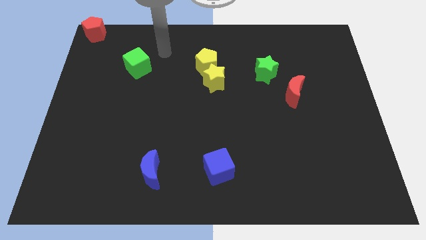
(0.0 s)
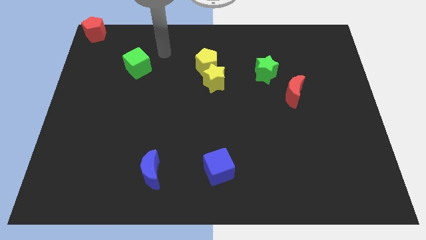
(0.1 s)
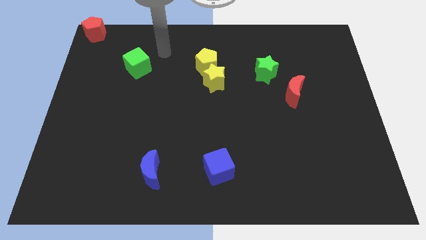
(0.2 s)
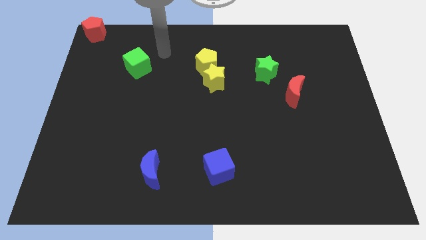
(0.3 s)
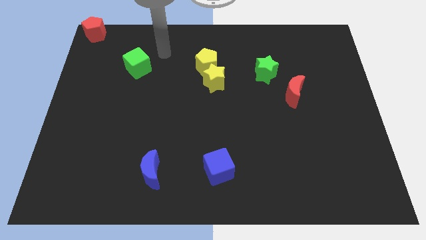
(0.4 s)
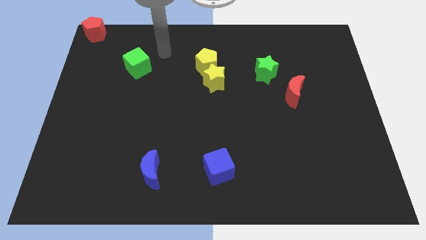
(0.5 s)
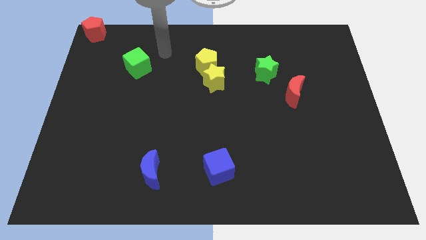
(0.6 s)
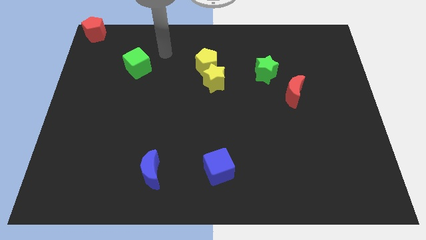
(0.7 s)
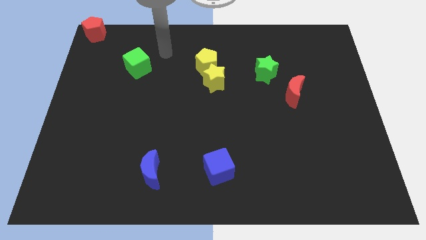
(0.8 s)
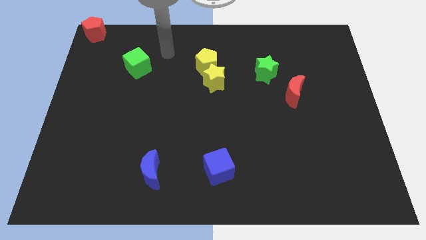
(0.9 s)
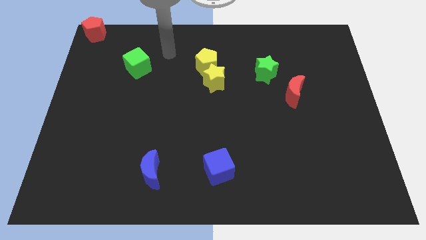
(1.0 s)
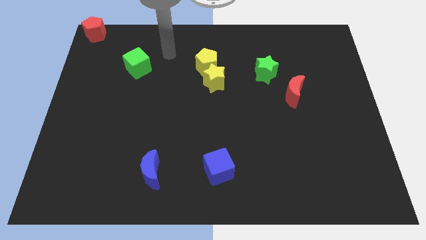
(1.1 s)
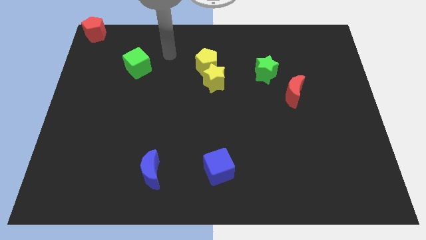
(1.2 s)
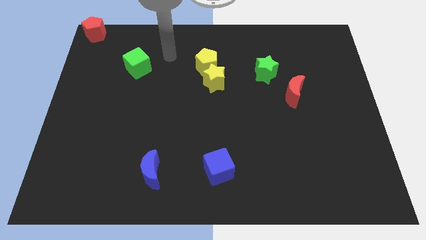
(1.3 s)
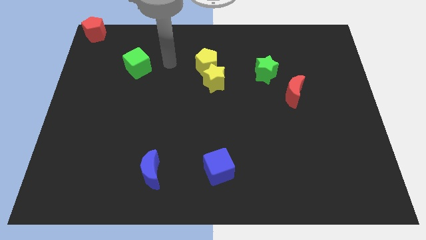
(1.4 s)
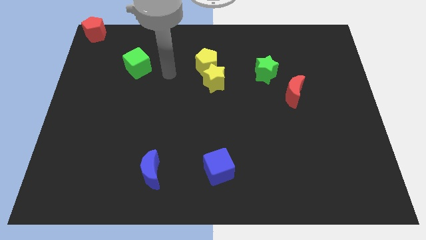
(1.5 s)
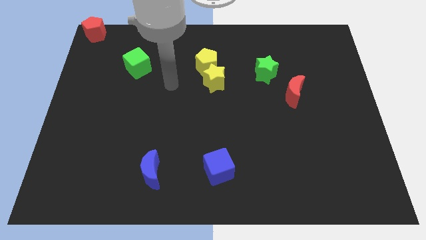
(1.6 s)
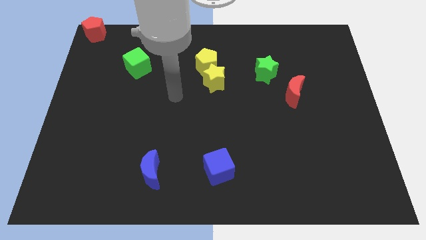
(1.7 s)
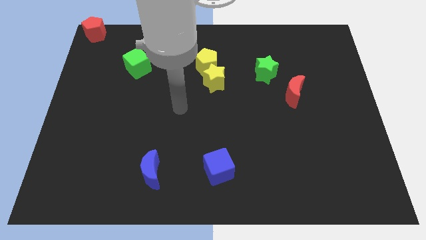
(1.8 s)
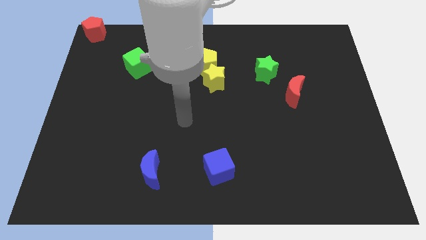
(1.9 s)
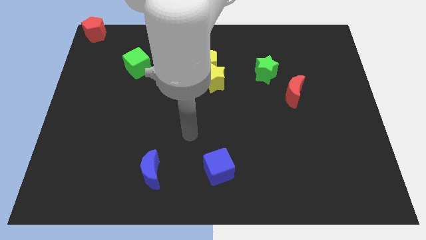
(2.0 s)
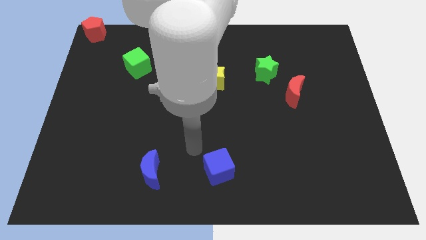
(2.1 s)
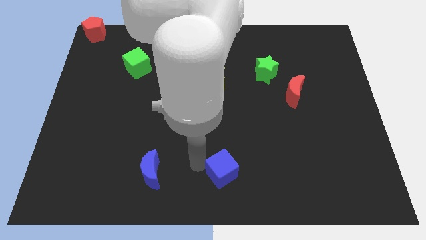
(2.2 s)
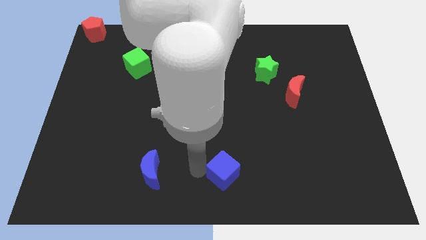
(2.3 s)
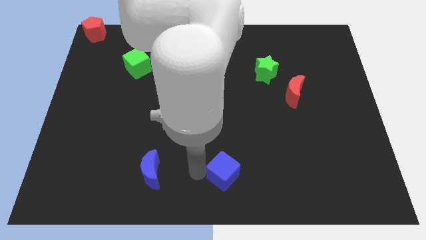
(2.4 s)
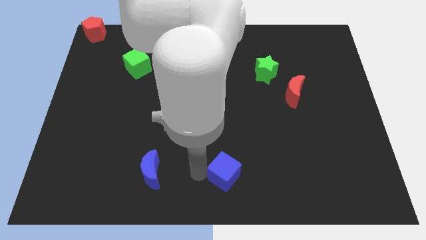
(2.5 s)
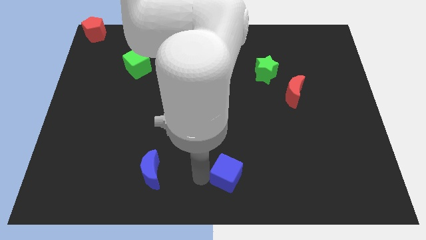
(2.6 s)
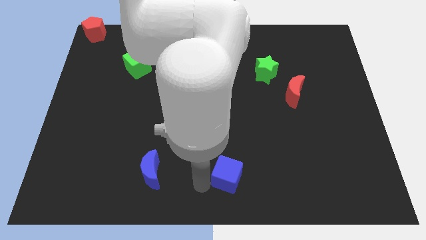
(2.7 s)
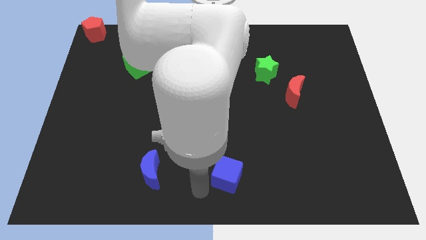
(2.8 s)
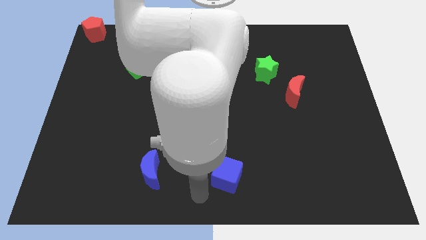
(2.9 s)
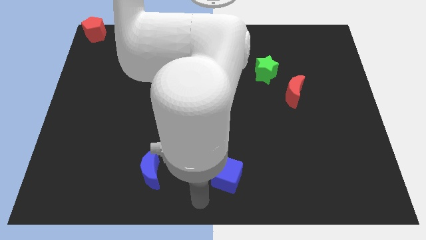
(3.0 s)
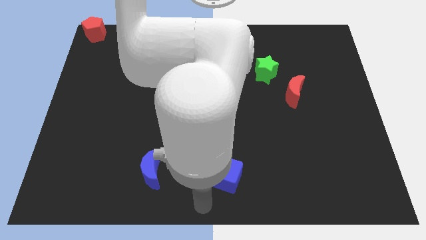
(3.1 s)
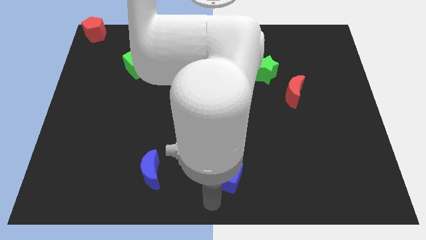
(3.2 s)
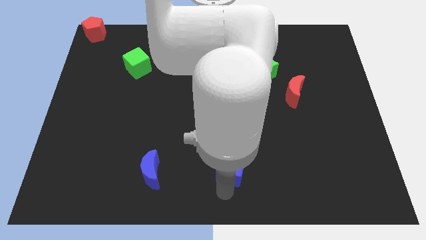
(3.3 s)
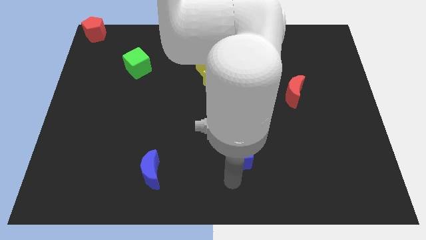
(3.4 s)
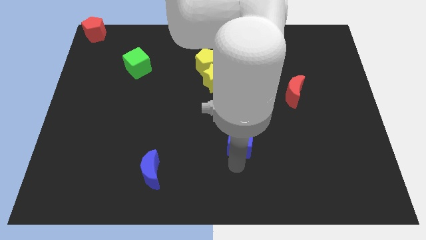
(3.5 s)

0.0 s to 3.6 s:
move the blue cube slightly to the center of the board

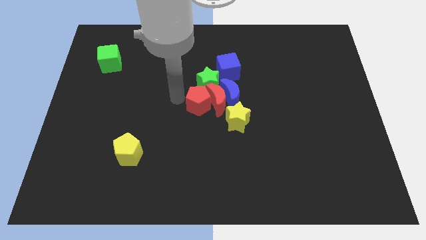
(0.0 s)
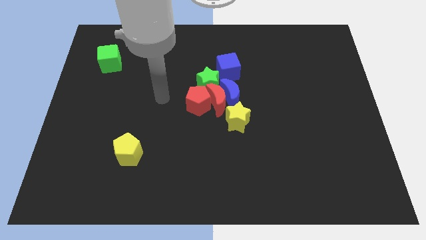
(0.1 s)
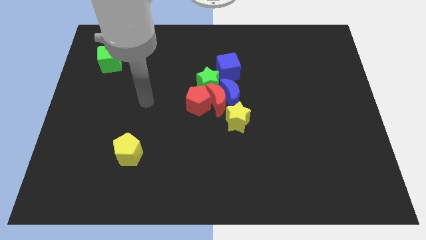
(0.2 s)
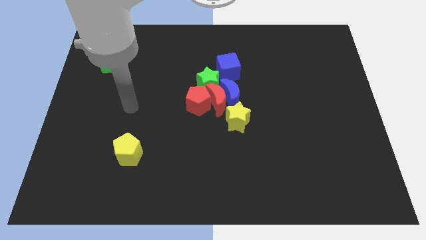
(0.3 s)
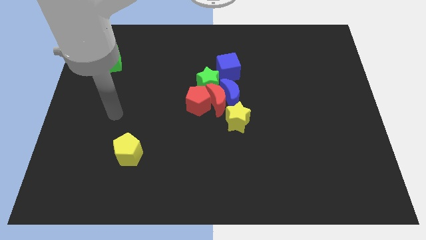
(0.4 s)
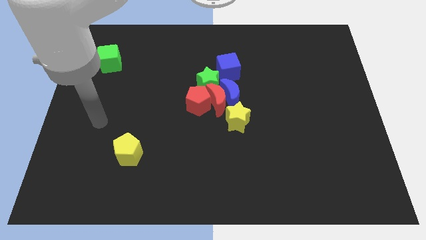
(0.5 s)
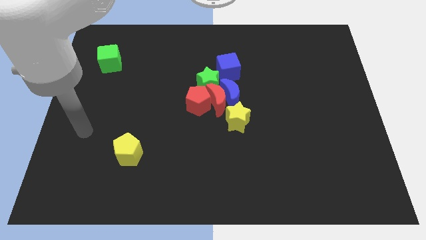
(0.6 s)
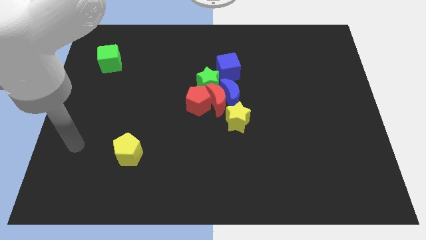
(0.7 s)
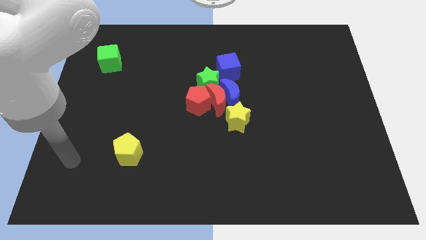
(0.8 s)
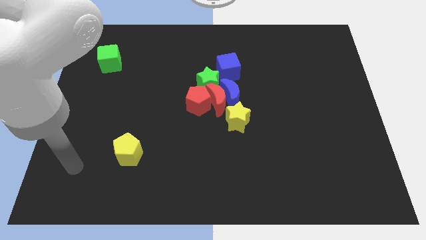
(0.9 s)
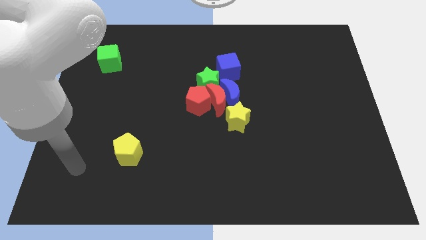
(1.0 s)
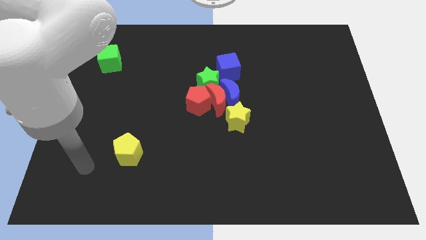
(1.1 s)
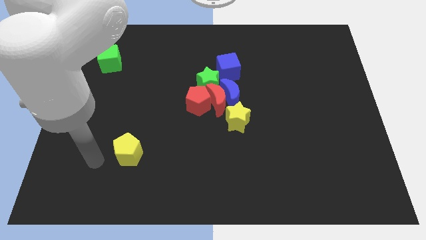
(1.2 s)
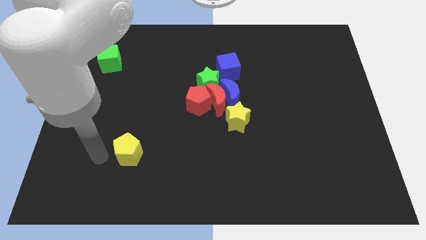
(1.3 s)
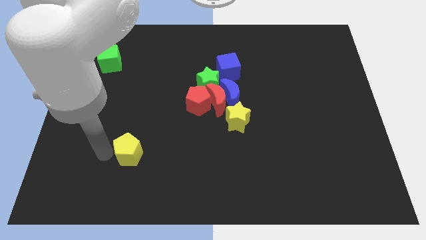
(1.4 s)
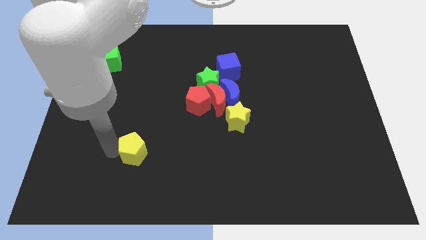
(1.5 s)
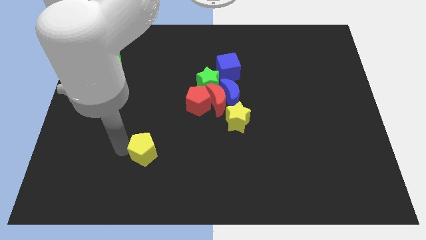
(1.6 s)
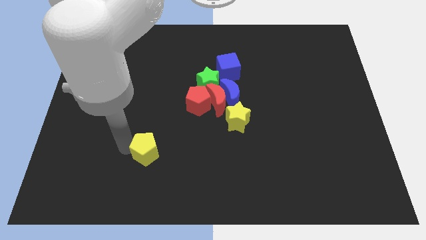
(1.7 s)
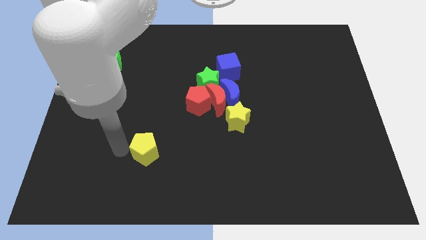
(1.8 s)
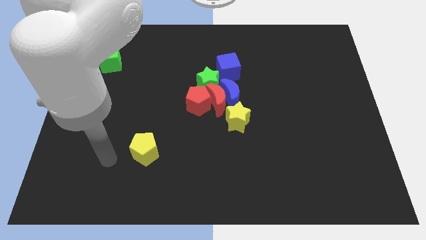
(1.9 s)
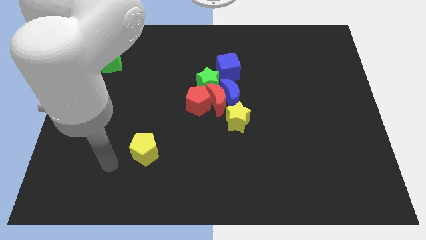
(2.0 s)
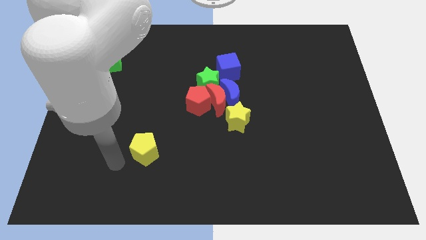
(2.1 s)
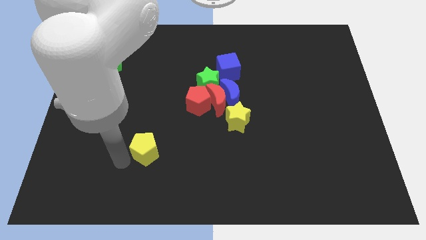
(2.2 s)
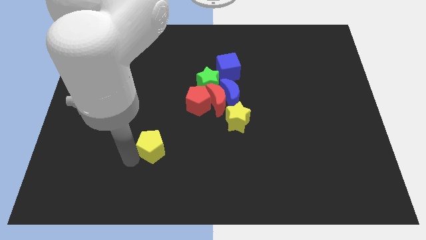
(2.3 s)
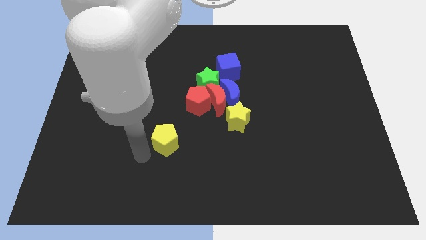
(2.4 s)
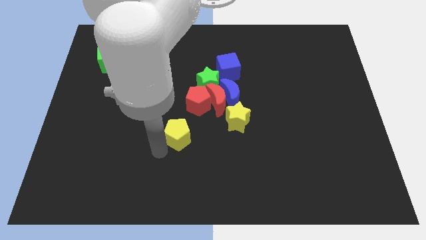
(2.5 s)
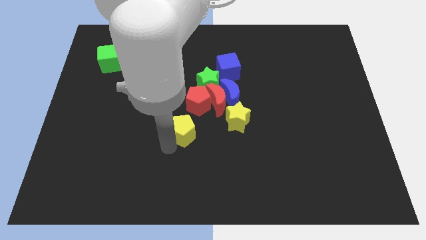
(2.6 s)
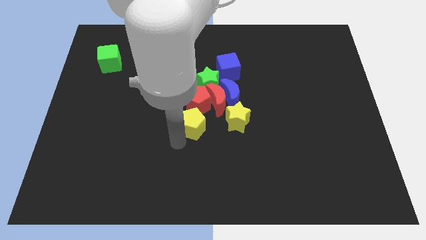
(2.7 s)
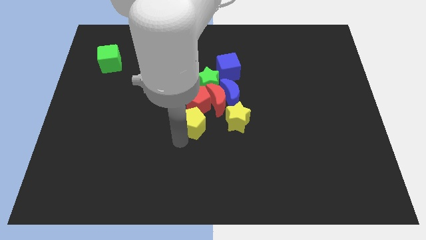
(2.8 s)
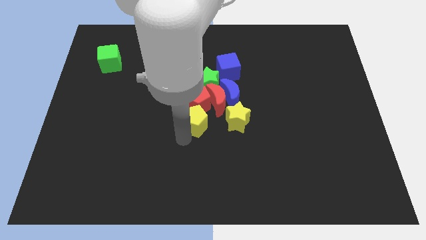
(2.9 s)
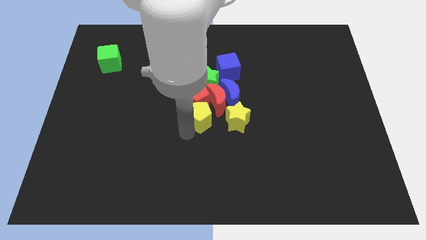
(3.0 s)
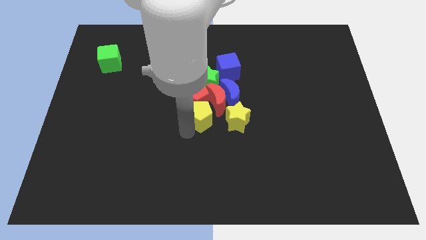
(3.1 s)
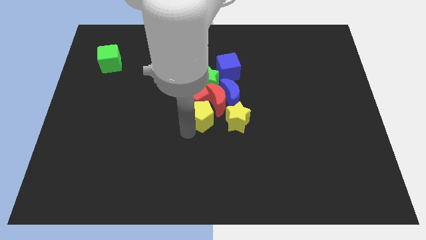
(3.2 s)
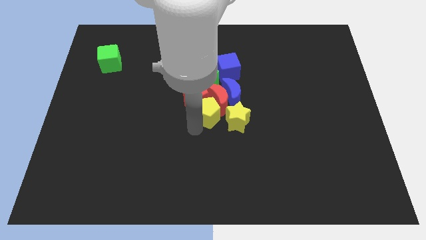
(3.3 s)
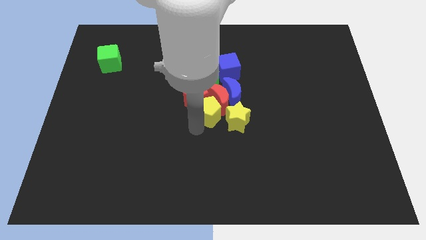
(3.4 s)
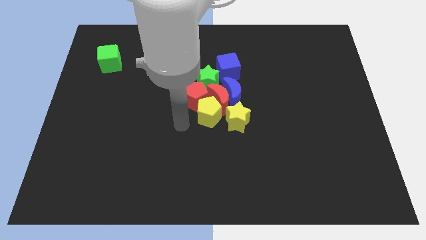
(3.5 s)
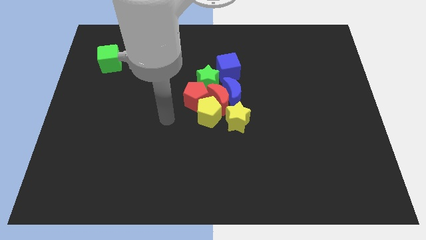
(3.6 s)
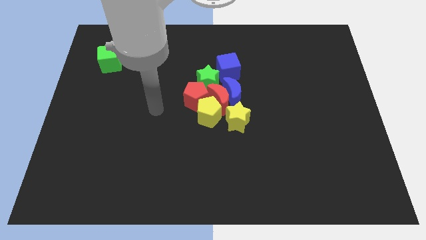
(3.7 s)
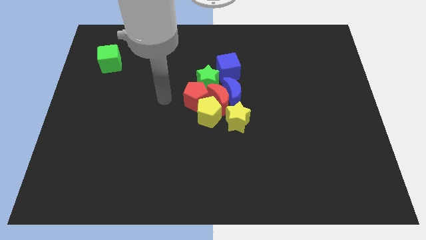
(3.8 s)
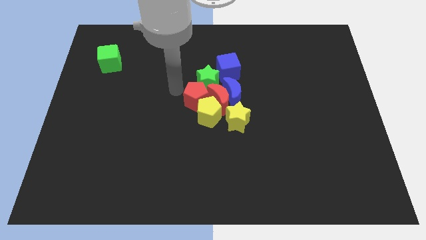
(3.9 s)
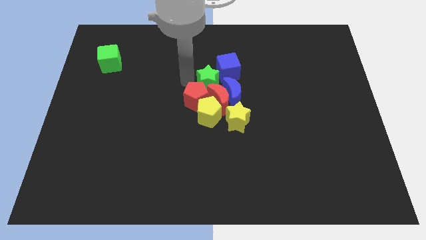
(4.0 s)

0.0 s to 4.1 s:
push the yellow pentagon into the red crescent

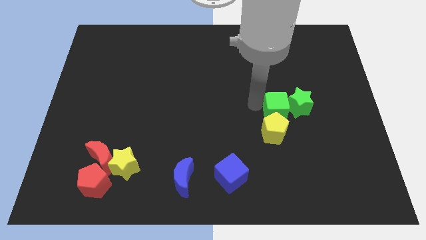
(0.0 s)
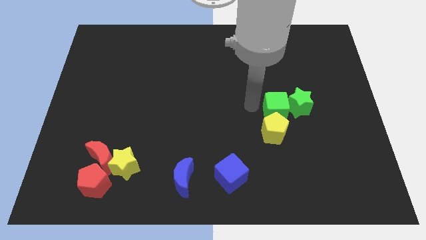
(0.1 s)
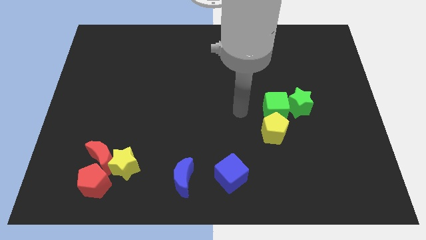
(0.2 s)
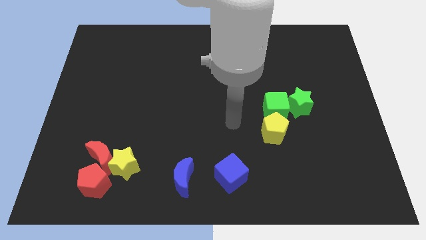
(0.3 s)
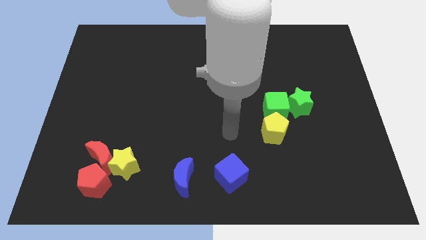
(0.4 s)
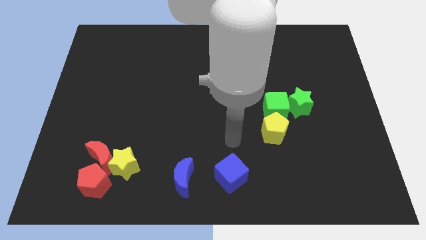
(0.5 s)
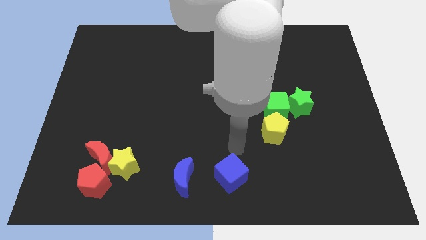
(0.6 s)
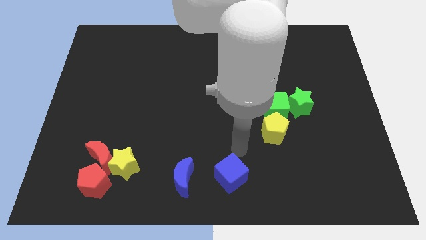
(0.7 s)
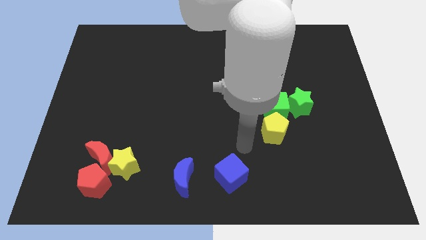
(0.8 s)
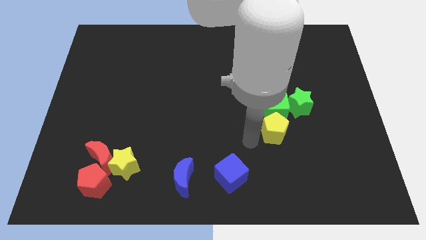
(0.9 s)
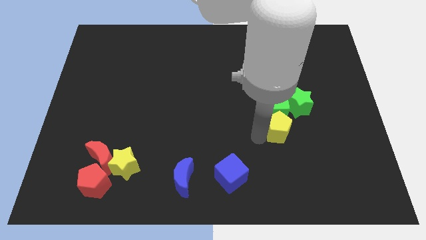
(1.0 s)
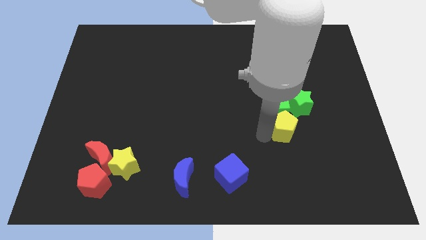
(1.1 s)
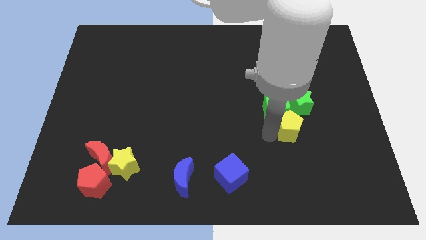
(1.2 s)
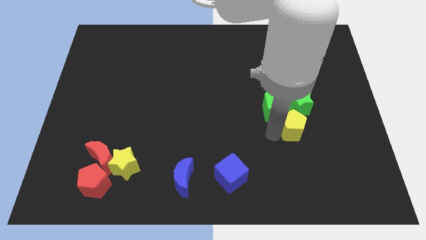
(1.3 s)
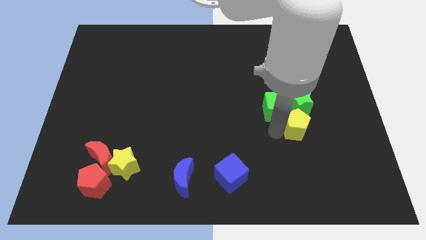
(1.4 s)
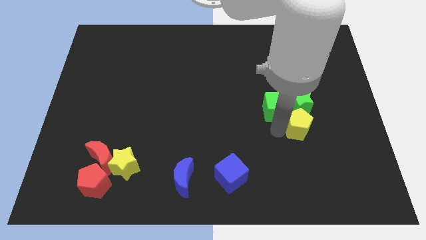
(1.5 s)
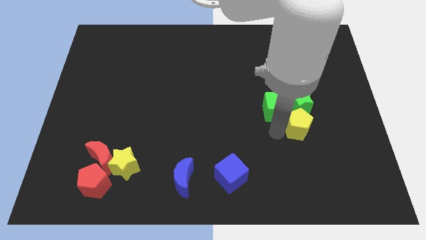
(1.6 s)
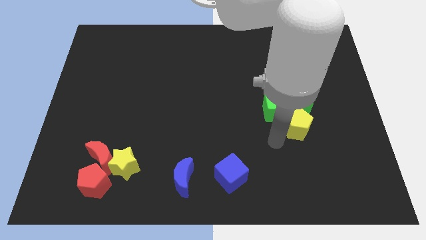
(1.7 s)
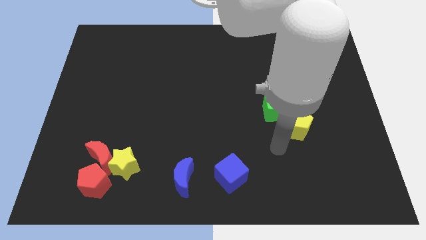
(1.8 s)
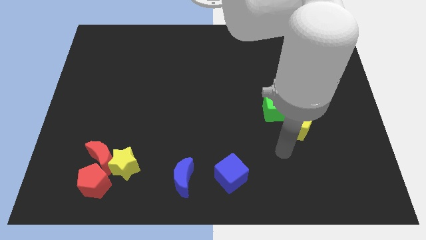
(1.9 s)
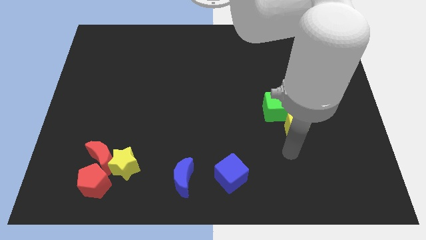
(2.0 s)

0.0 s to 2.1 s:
slightly move yellow pentagon close to the green colour objects
